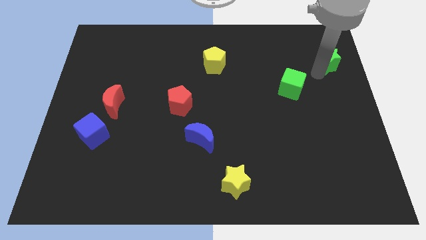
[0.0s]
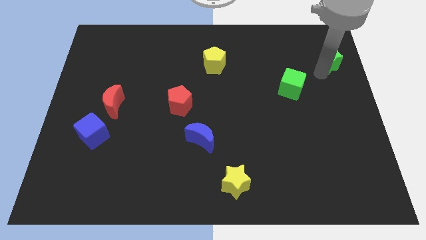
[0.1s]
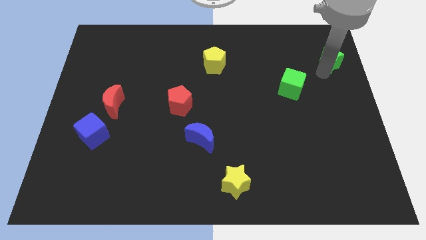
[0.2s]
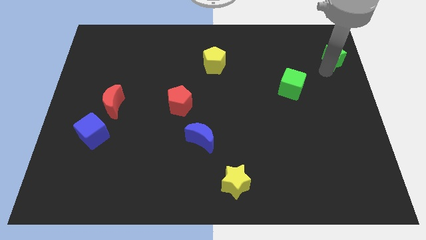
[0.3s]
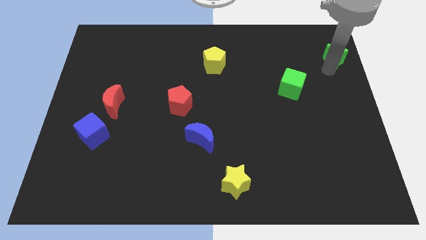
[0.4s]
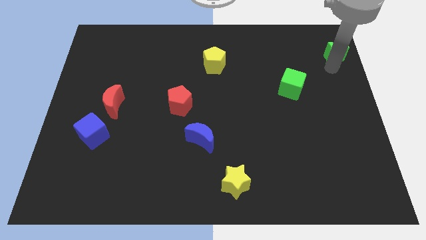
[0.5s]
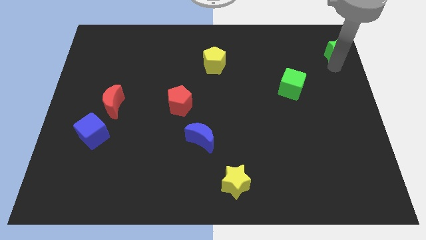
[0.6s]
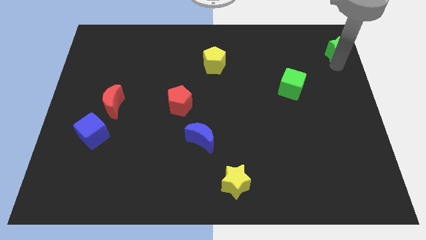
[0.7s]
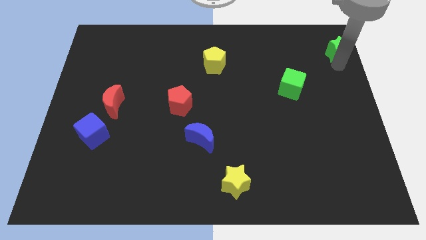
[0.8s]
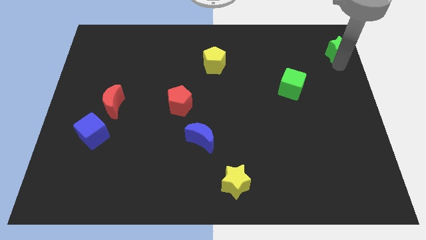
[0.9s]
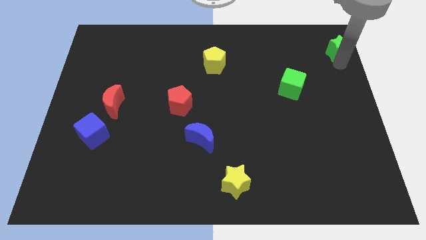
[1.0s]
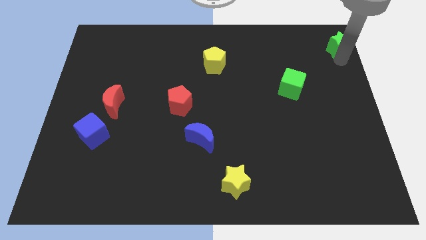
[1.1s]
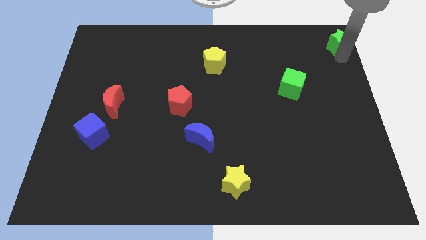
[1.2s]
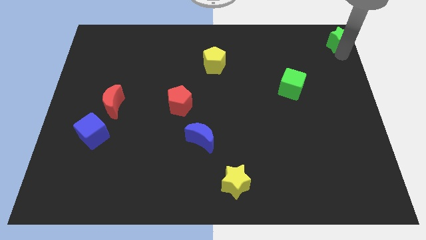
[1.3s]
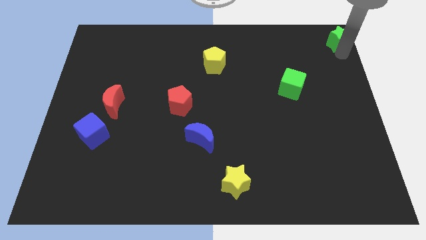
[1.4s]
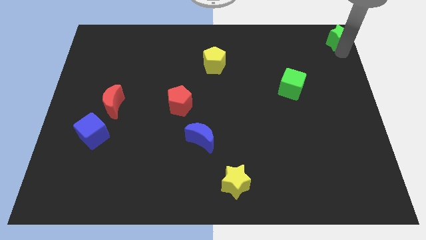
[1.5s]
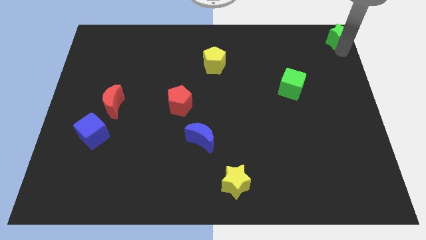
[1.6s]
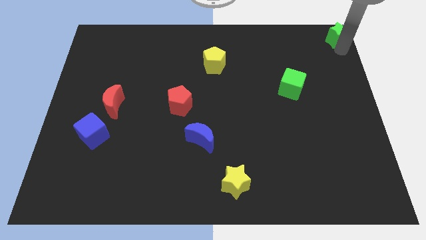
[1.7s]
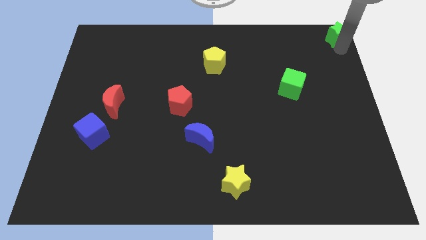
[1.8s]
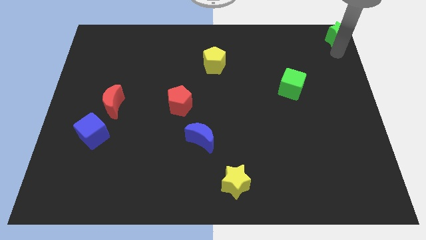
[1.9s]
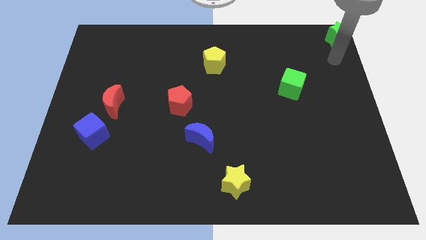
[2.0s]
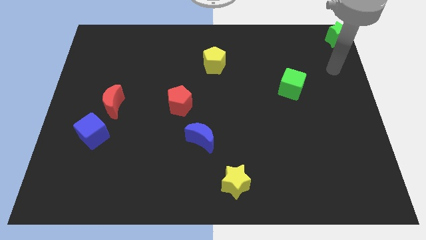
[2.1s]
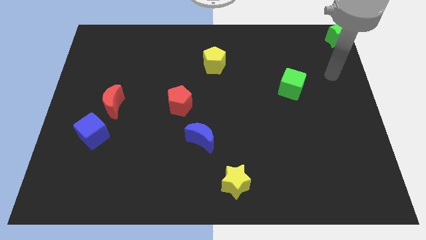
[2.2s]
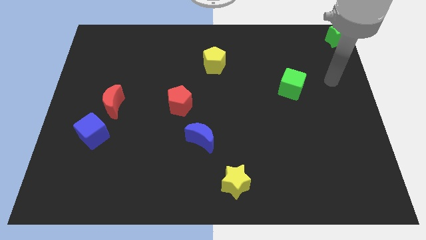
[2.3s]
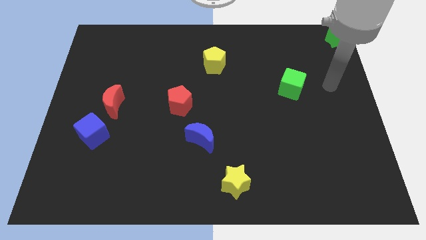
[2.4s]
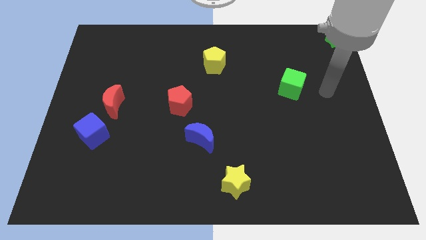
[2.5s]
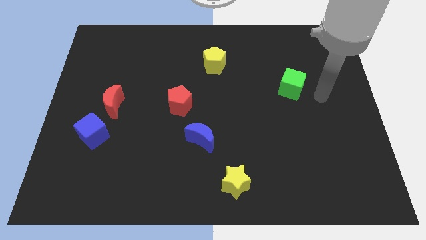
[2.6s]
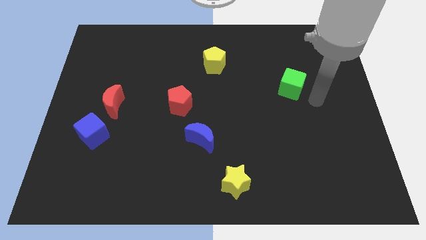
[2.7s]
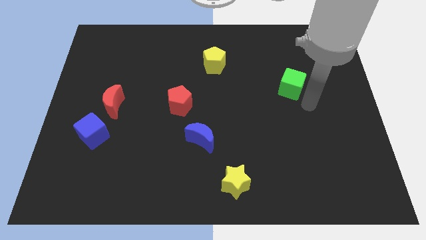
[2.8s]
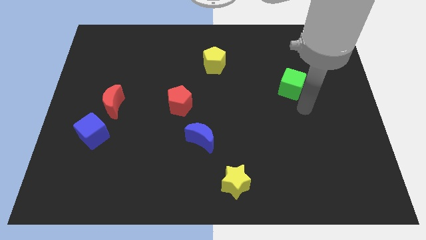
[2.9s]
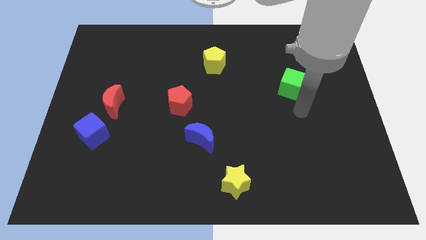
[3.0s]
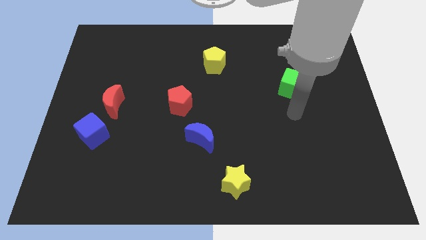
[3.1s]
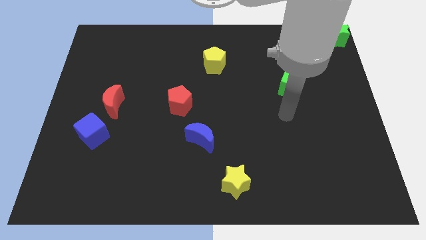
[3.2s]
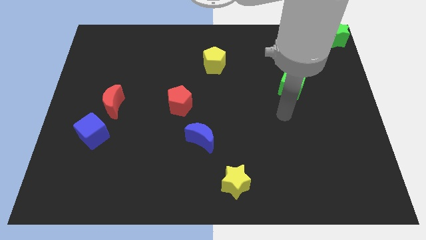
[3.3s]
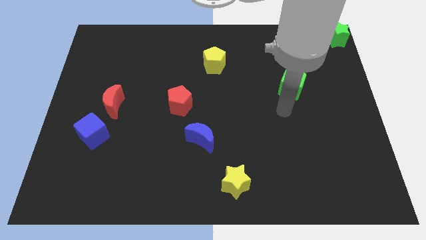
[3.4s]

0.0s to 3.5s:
put the green star at the top right corner

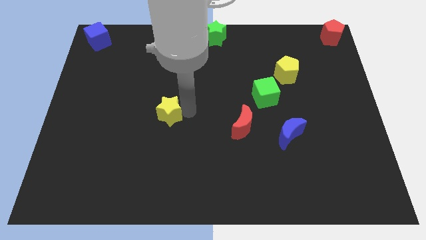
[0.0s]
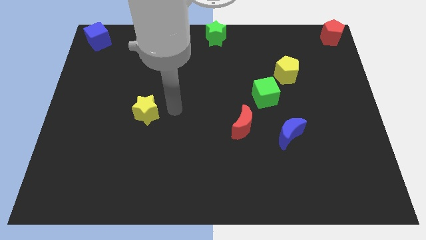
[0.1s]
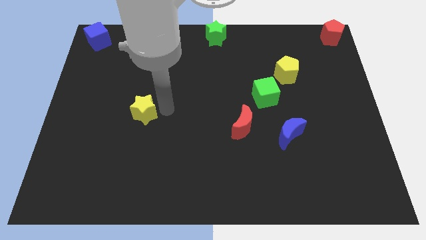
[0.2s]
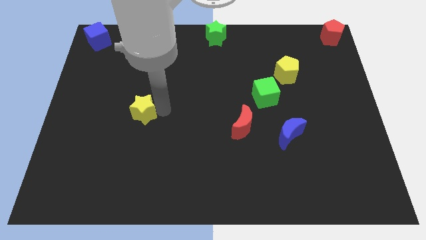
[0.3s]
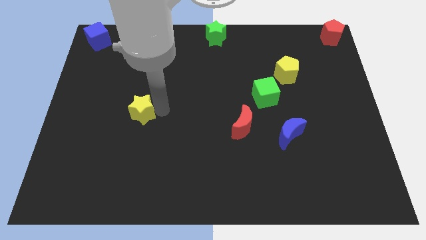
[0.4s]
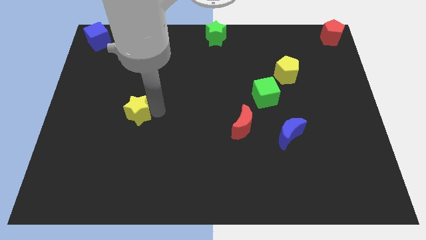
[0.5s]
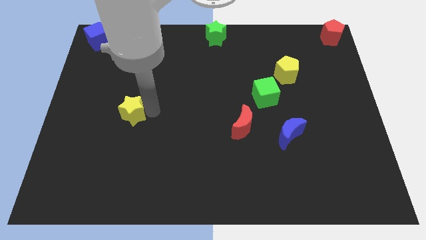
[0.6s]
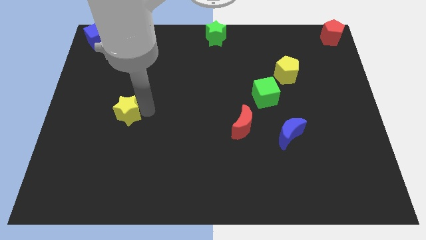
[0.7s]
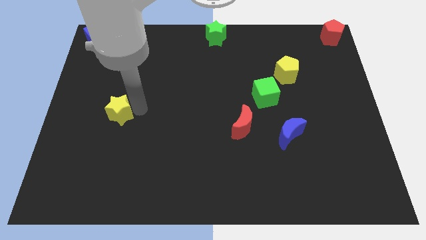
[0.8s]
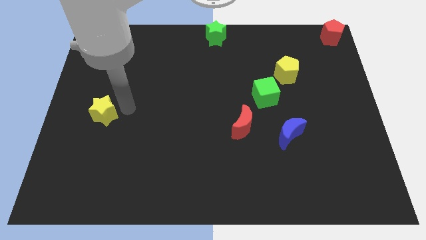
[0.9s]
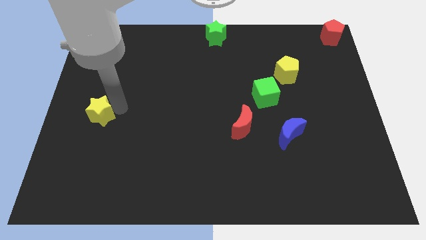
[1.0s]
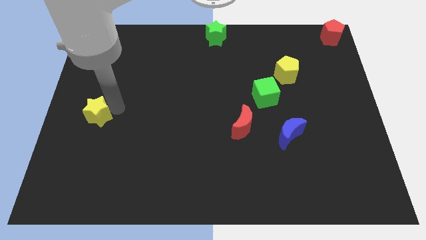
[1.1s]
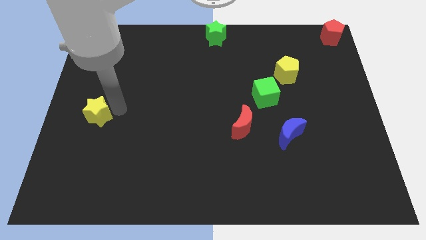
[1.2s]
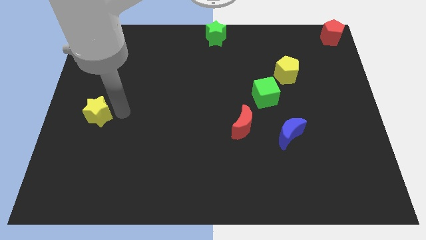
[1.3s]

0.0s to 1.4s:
push the yellow star to the left side

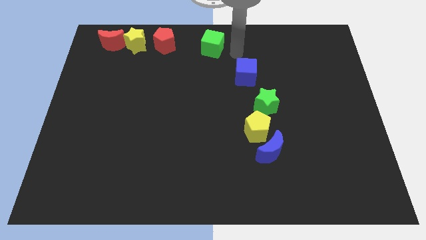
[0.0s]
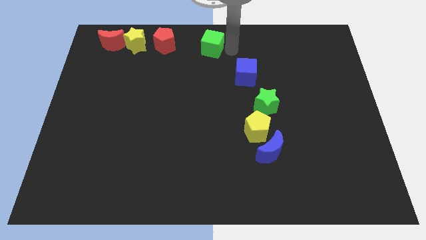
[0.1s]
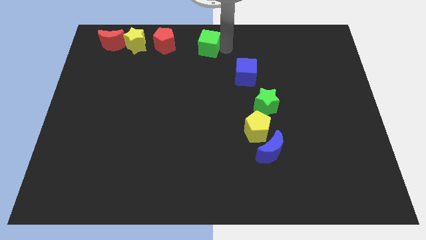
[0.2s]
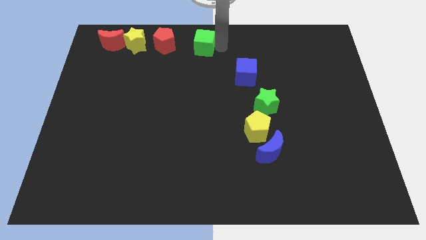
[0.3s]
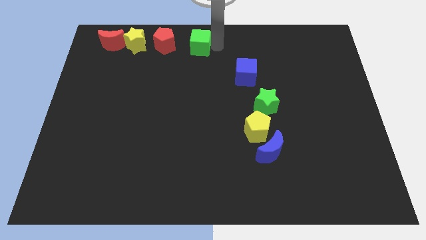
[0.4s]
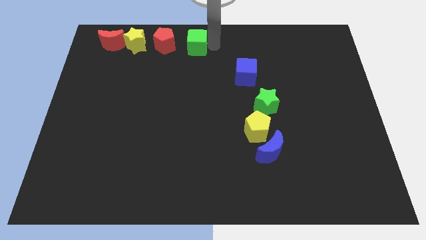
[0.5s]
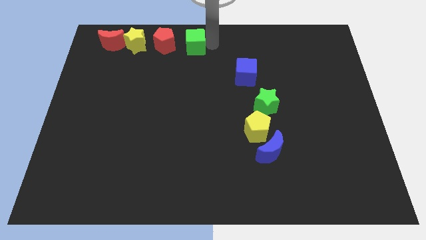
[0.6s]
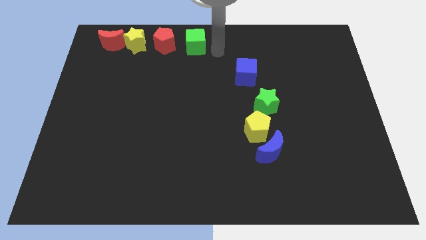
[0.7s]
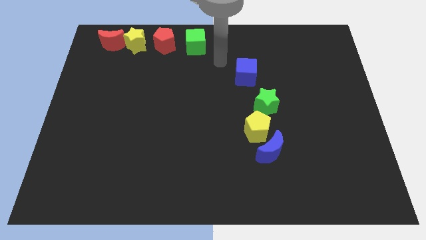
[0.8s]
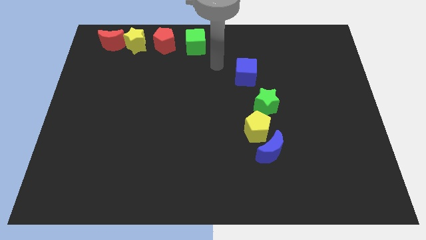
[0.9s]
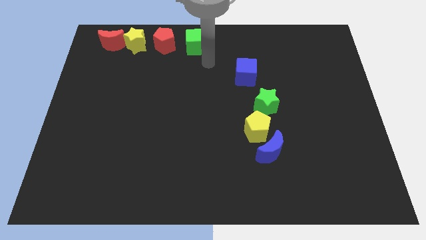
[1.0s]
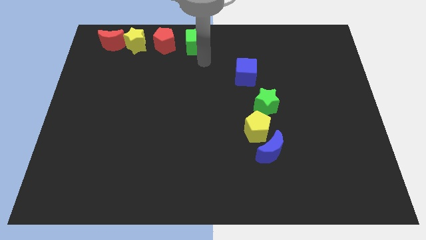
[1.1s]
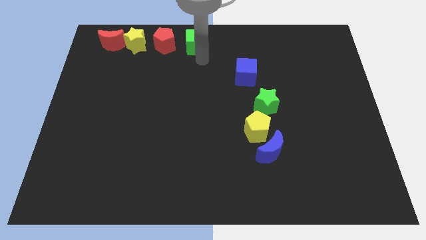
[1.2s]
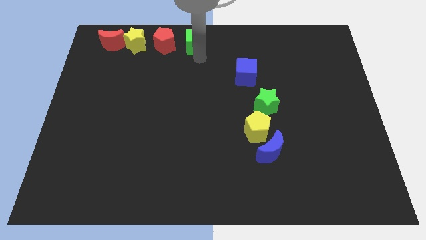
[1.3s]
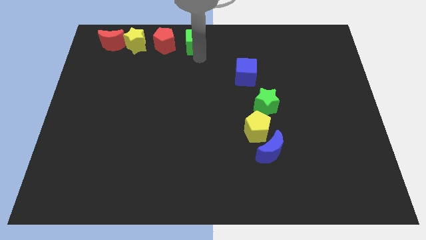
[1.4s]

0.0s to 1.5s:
push the green cube to the right of the red pentagon

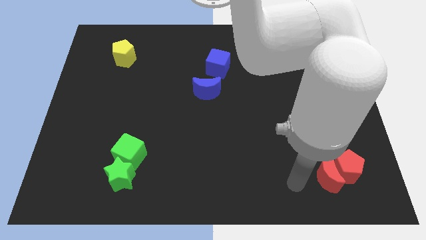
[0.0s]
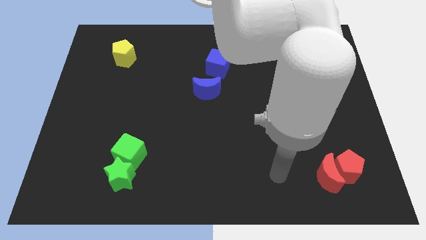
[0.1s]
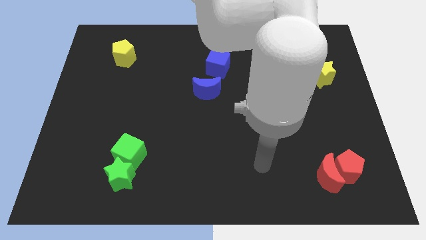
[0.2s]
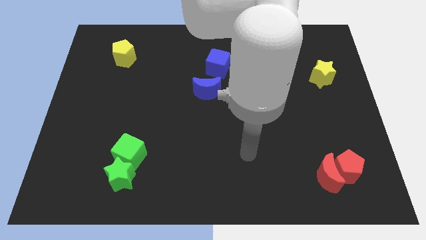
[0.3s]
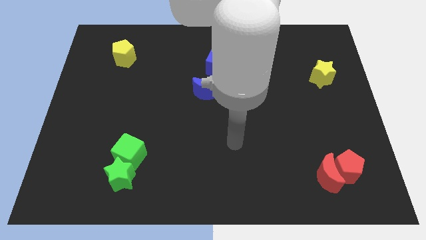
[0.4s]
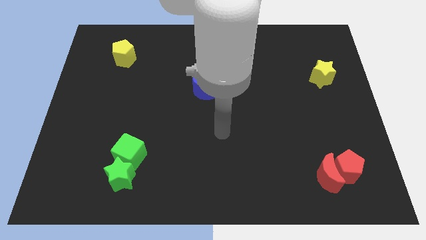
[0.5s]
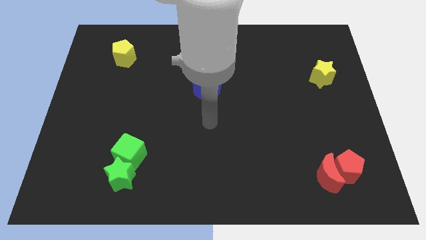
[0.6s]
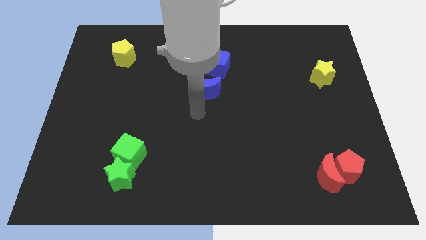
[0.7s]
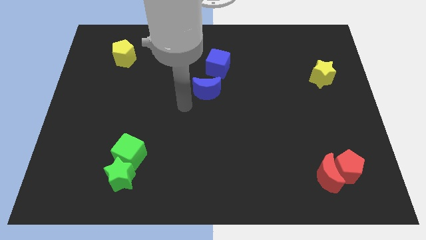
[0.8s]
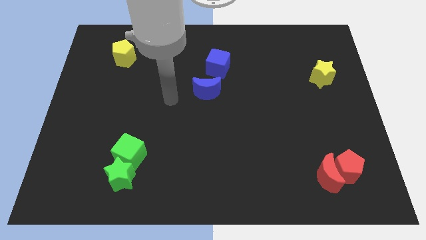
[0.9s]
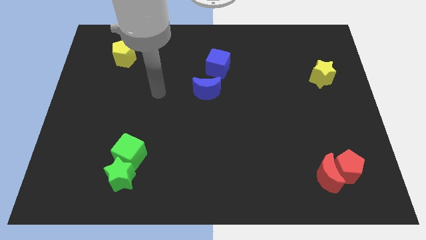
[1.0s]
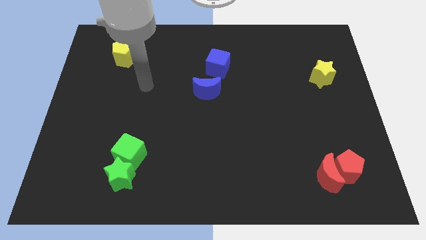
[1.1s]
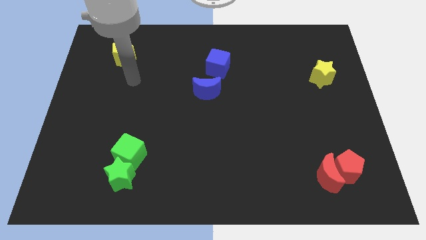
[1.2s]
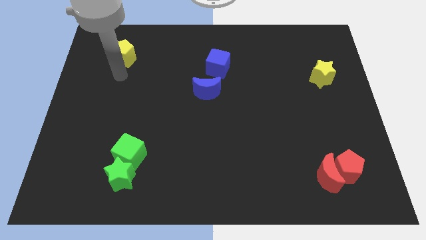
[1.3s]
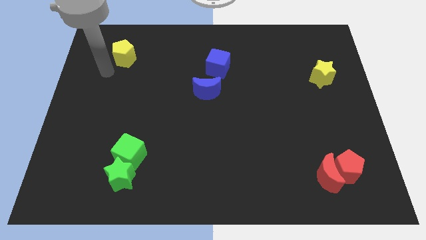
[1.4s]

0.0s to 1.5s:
point your arm at the bottom of yellow pentagon

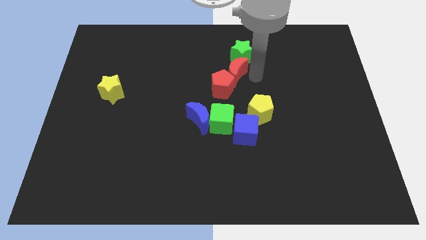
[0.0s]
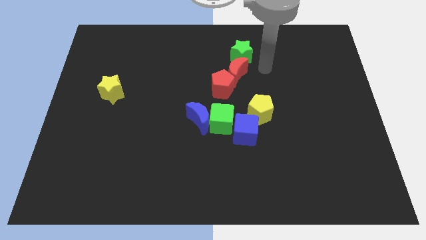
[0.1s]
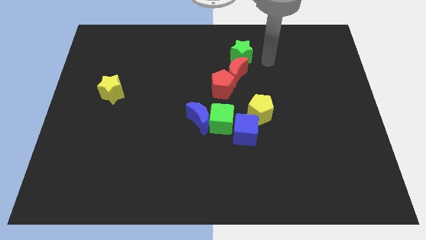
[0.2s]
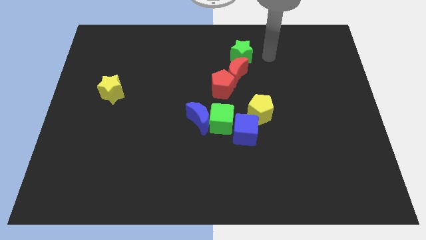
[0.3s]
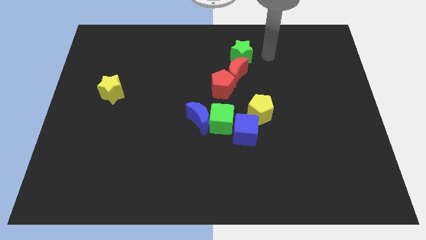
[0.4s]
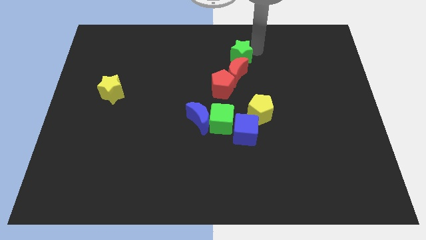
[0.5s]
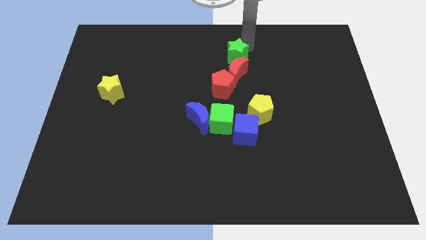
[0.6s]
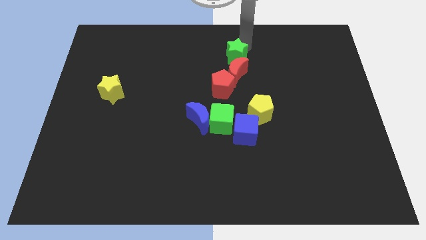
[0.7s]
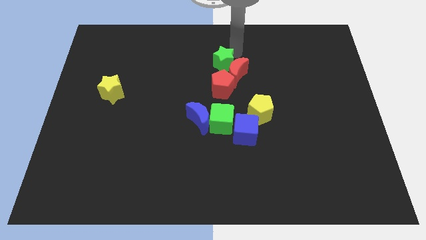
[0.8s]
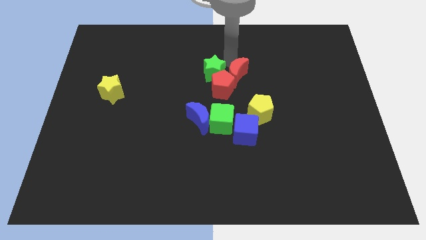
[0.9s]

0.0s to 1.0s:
move the green star to the top of the red pentagon

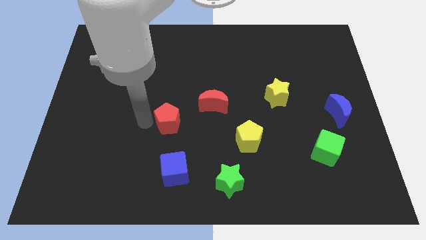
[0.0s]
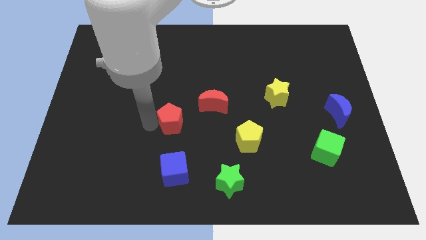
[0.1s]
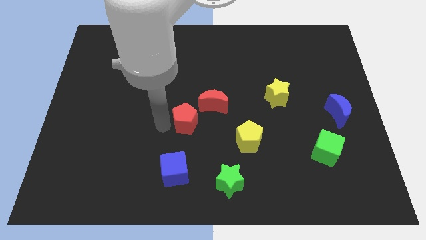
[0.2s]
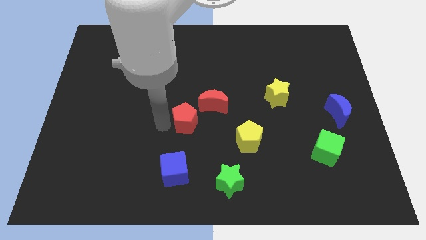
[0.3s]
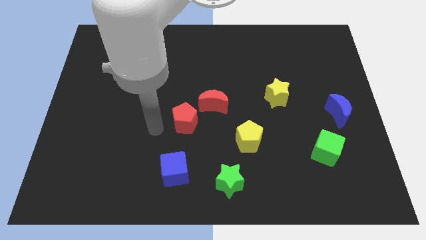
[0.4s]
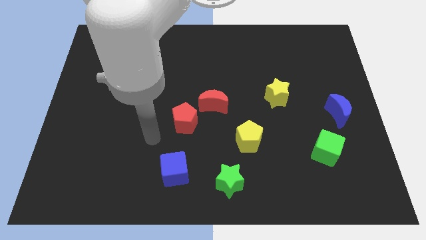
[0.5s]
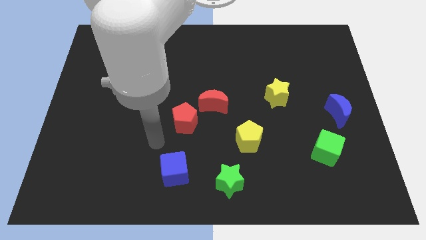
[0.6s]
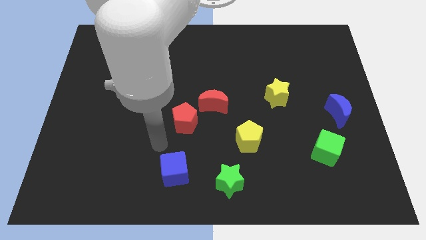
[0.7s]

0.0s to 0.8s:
push red pentagon near to red crescent
